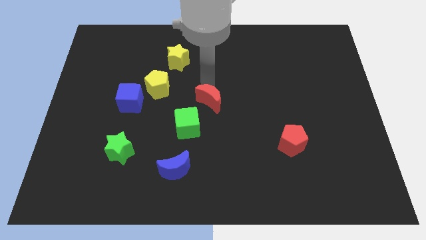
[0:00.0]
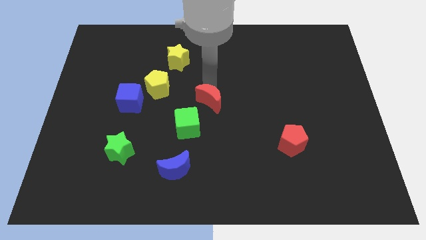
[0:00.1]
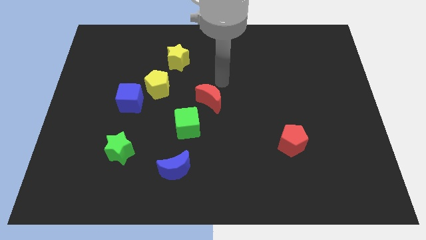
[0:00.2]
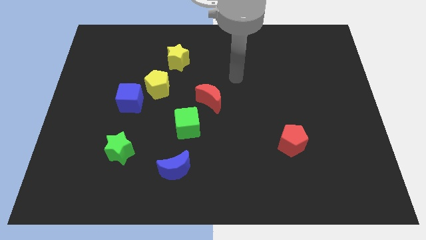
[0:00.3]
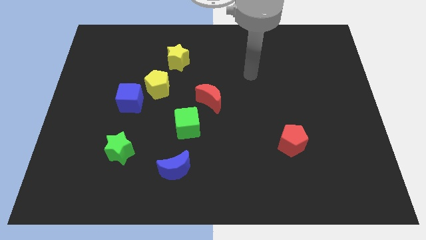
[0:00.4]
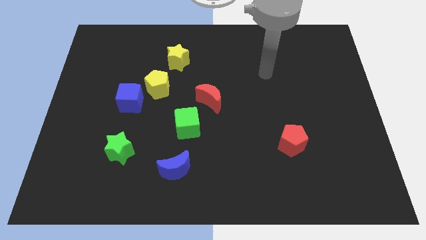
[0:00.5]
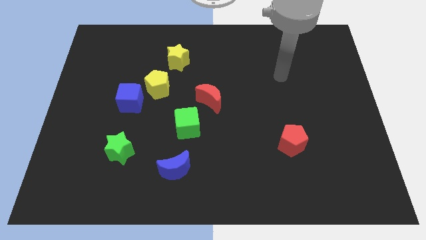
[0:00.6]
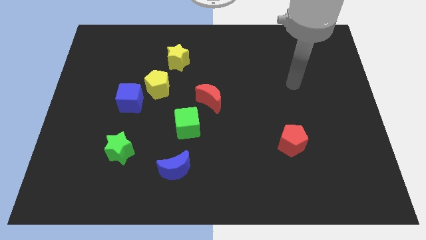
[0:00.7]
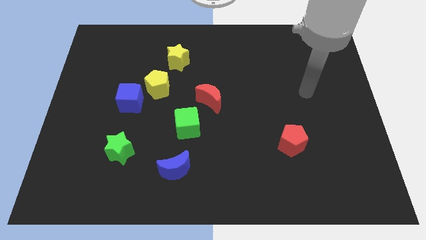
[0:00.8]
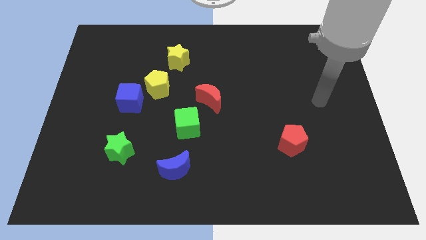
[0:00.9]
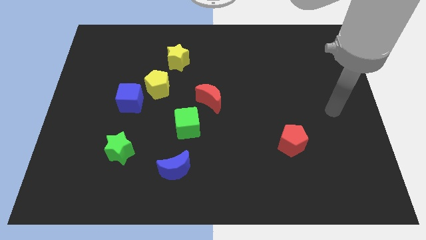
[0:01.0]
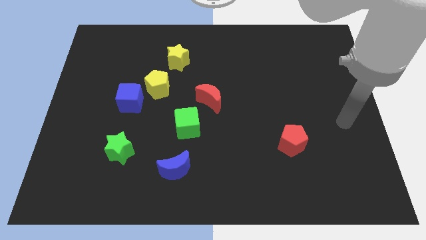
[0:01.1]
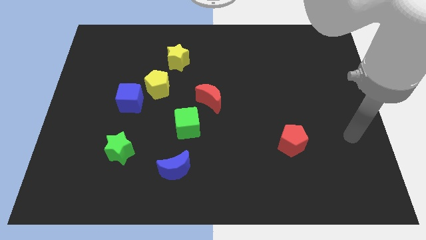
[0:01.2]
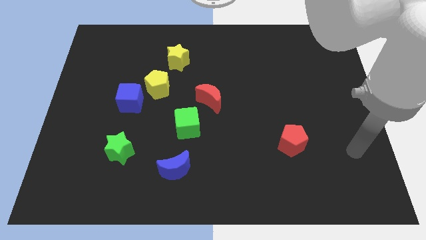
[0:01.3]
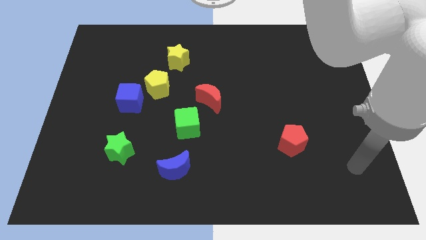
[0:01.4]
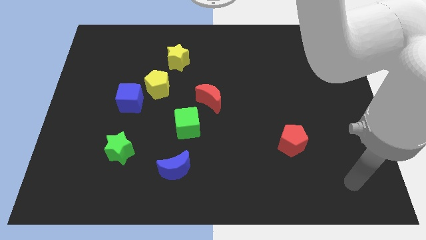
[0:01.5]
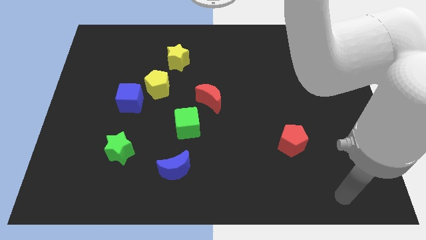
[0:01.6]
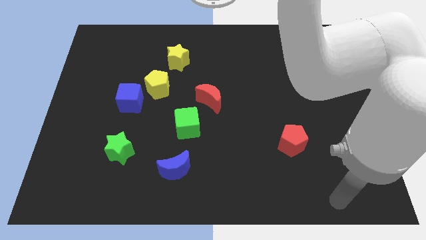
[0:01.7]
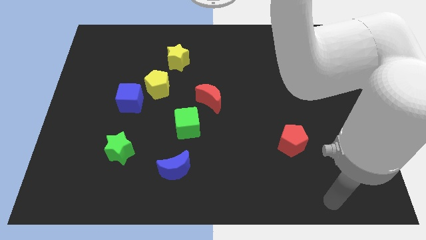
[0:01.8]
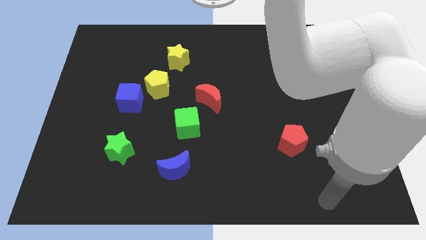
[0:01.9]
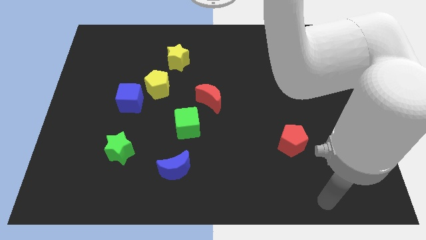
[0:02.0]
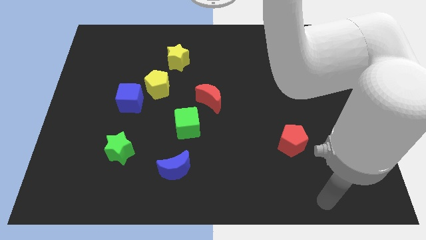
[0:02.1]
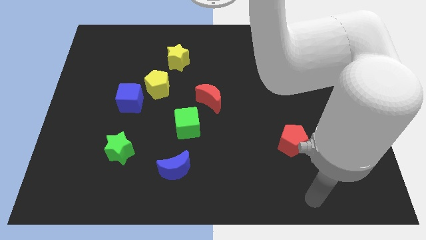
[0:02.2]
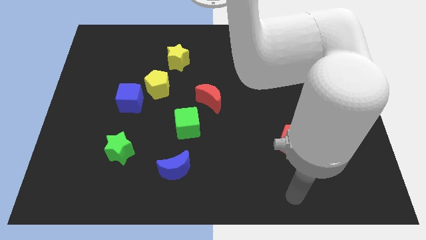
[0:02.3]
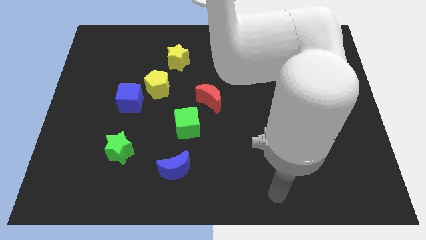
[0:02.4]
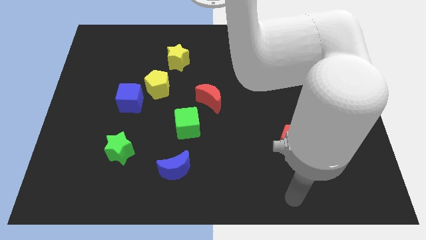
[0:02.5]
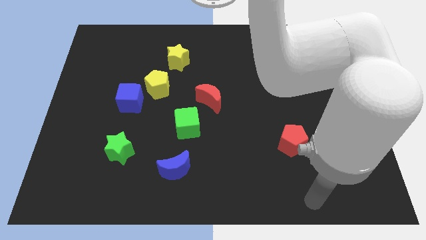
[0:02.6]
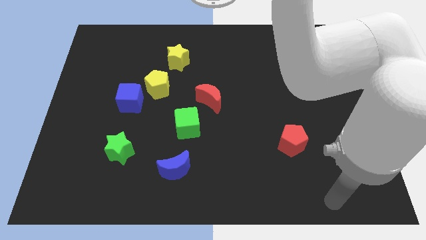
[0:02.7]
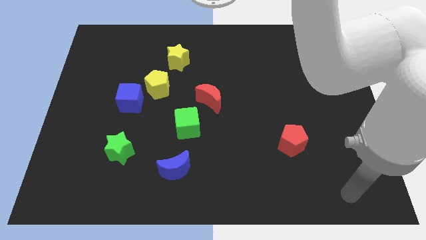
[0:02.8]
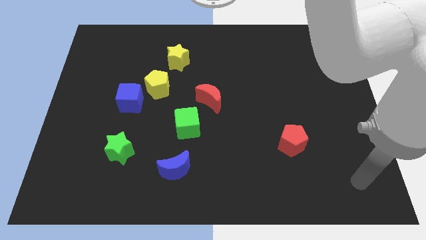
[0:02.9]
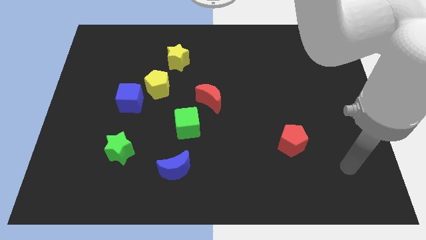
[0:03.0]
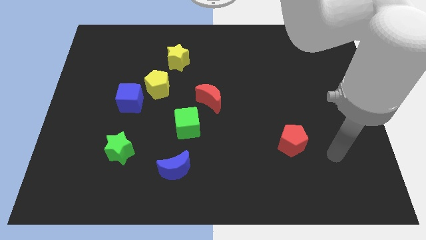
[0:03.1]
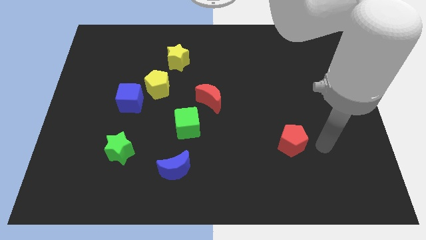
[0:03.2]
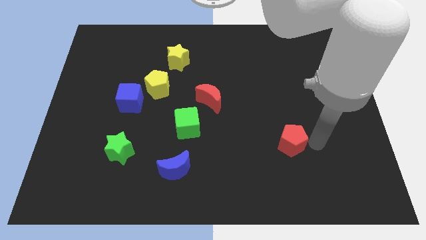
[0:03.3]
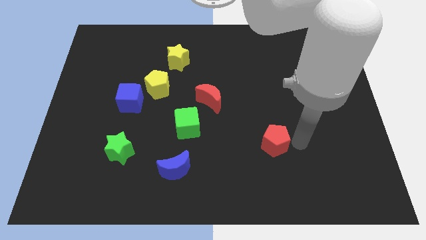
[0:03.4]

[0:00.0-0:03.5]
move your arm towards the red pentagon

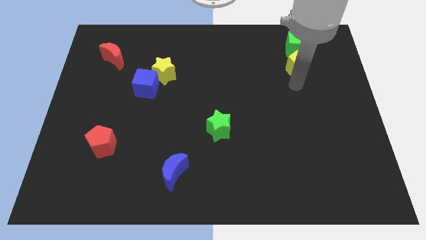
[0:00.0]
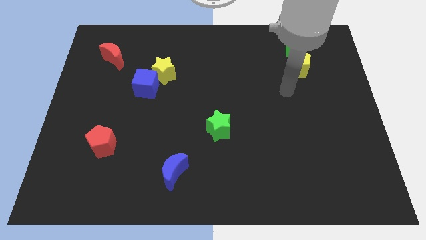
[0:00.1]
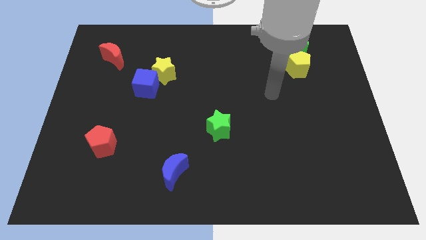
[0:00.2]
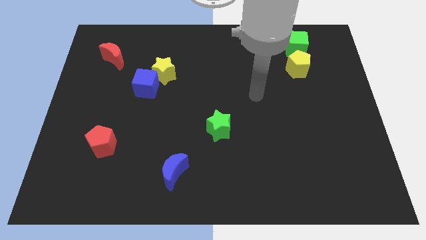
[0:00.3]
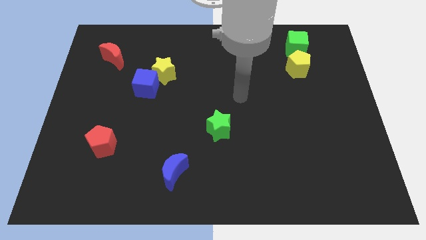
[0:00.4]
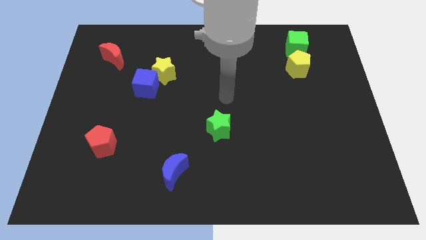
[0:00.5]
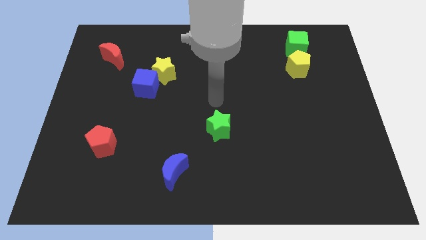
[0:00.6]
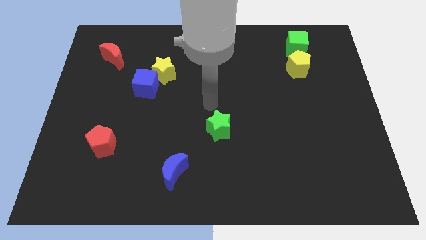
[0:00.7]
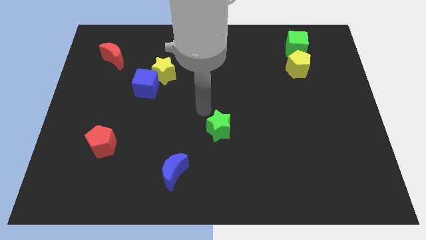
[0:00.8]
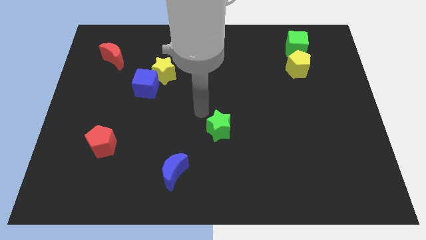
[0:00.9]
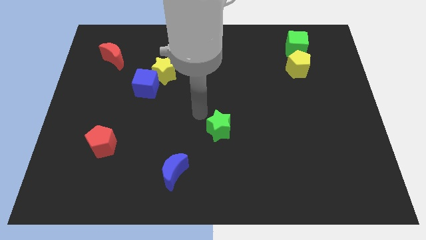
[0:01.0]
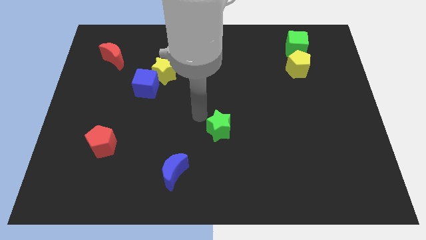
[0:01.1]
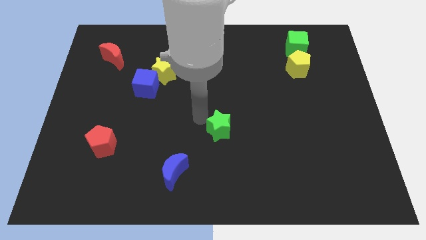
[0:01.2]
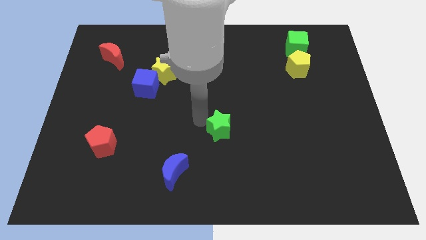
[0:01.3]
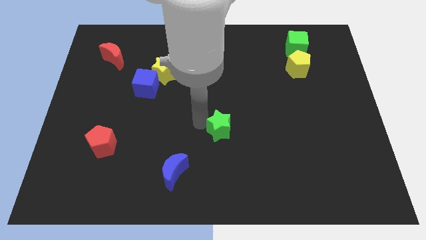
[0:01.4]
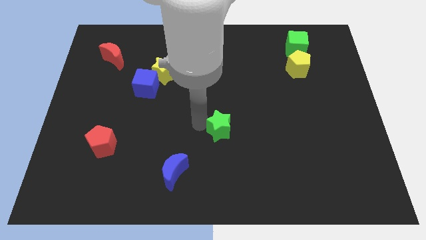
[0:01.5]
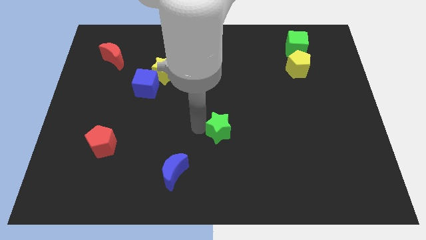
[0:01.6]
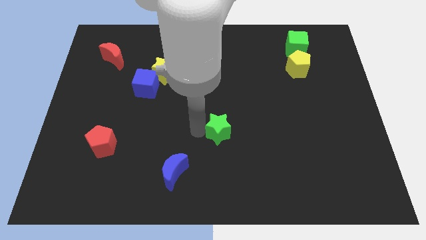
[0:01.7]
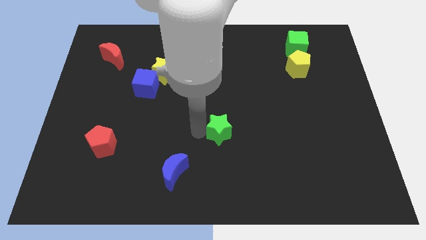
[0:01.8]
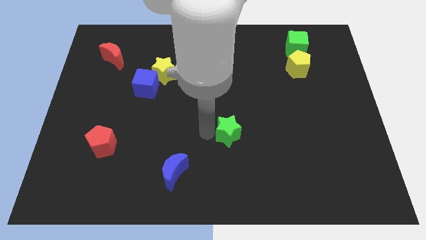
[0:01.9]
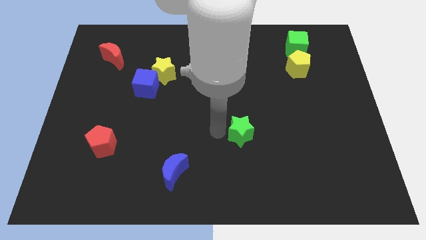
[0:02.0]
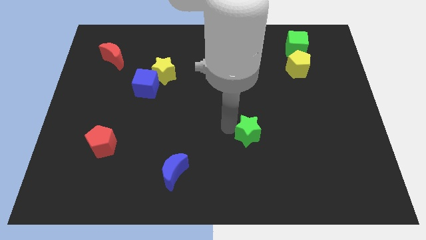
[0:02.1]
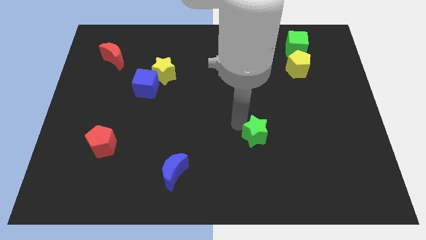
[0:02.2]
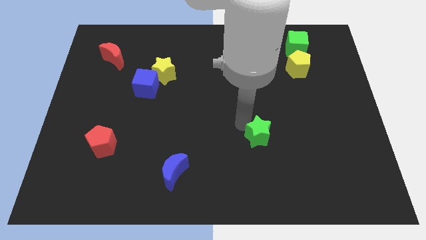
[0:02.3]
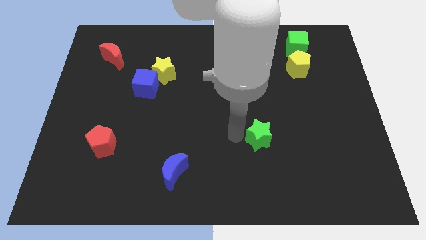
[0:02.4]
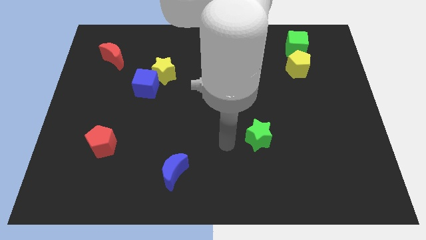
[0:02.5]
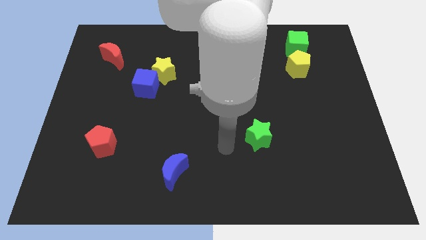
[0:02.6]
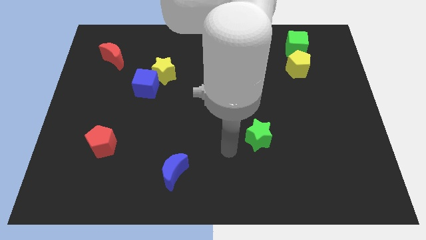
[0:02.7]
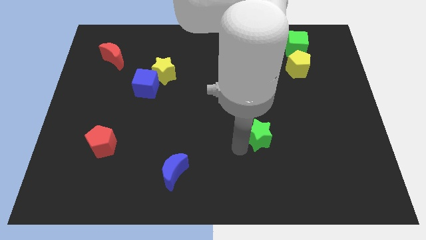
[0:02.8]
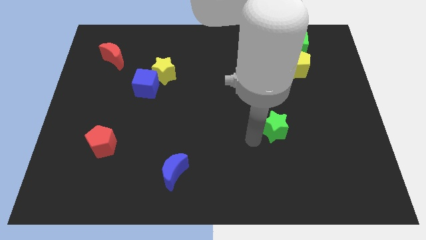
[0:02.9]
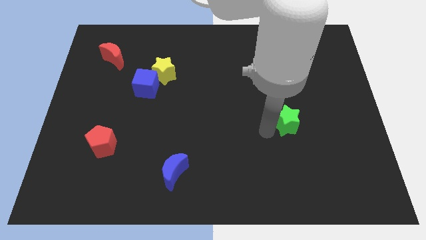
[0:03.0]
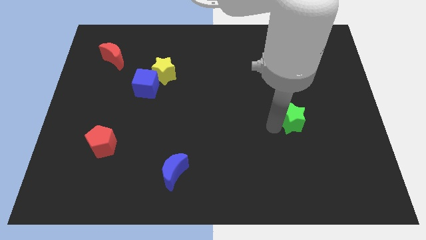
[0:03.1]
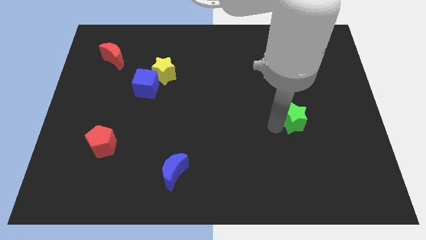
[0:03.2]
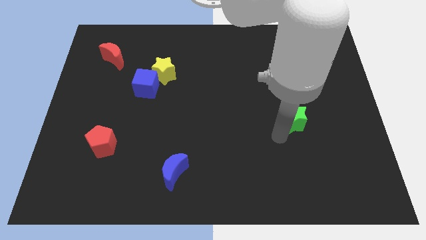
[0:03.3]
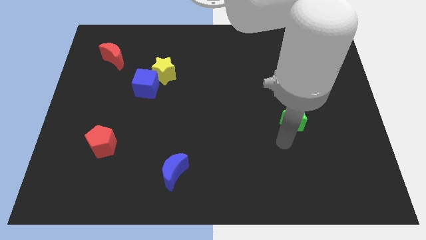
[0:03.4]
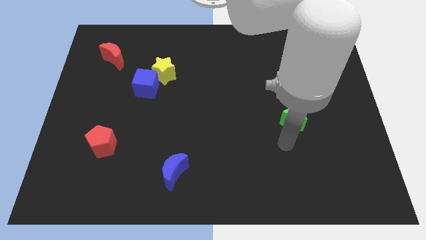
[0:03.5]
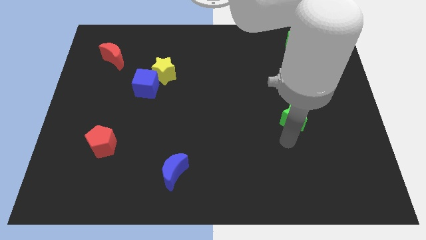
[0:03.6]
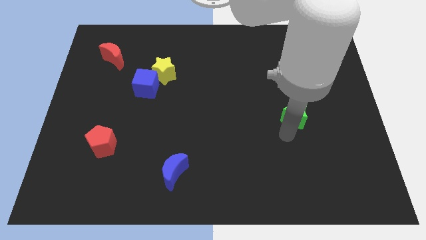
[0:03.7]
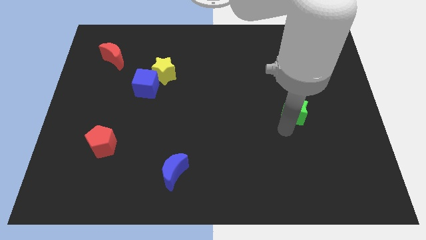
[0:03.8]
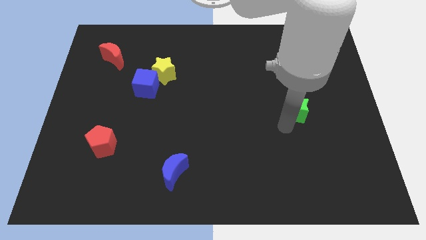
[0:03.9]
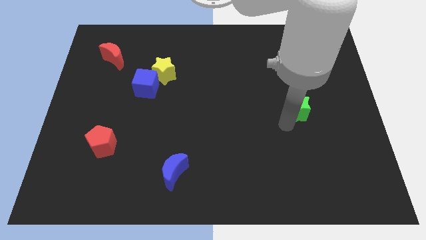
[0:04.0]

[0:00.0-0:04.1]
move the green star towards right center of the board

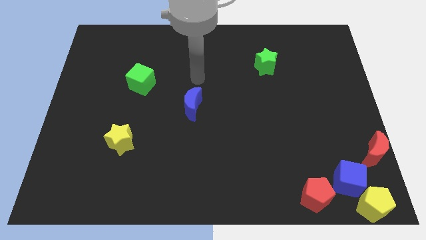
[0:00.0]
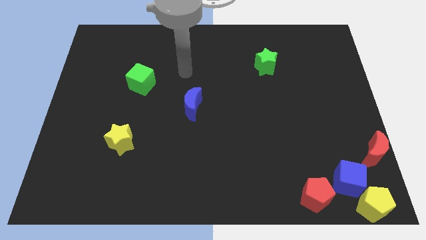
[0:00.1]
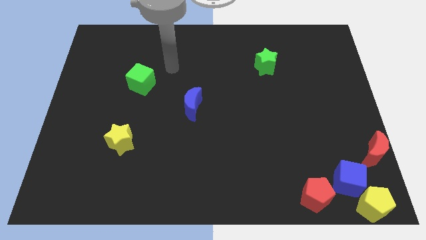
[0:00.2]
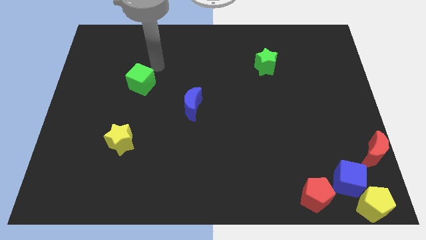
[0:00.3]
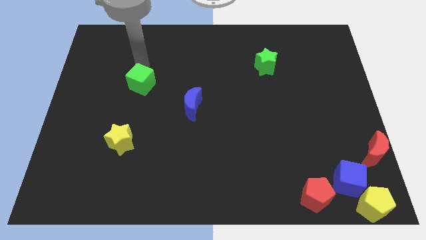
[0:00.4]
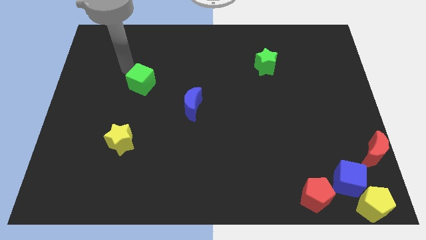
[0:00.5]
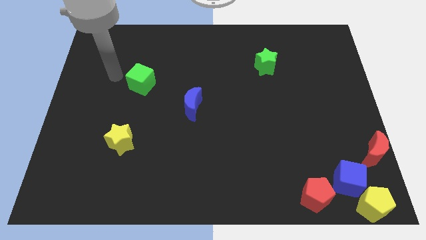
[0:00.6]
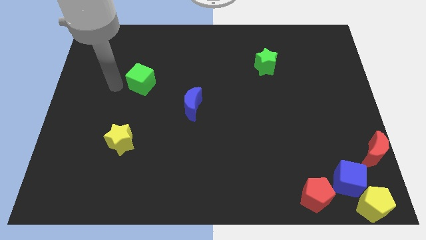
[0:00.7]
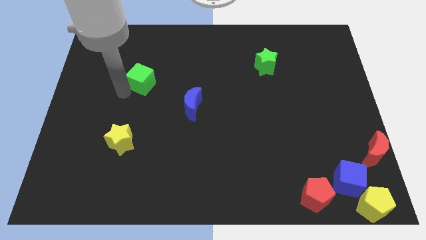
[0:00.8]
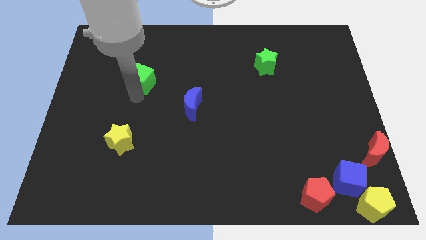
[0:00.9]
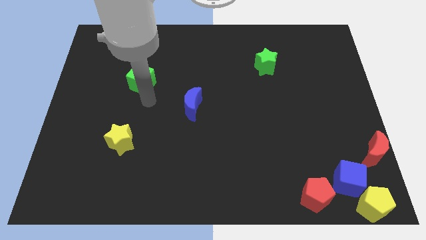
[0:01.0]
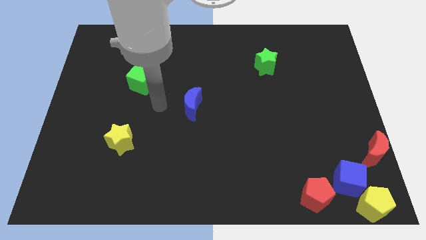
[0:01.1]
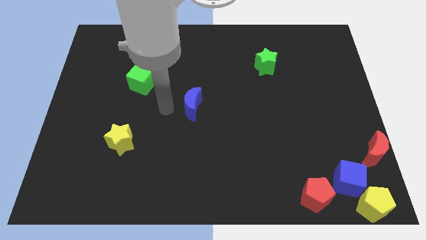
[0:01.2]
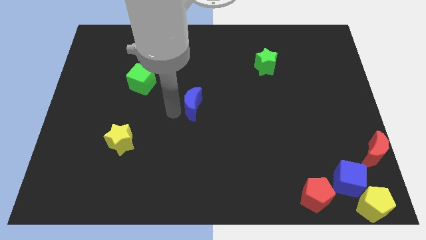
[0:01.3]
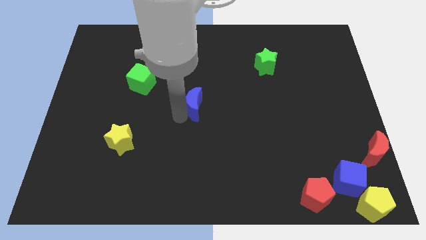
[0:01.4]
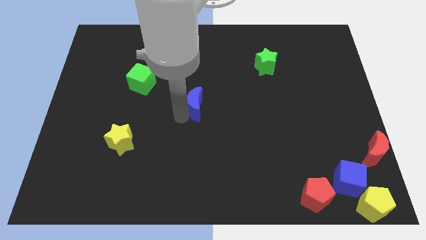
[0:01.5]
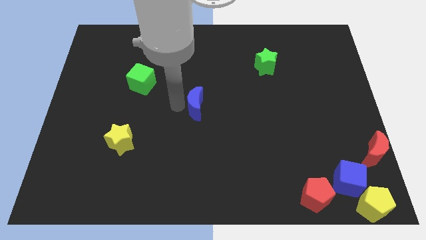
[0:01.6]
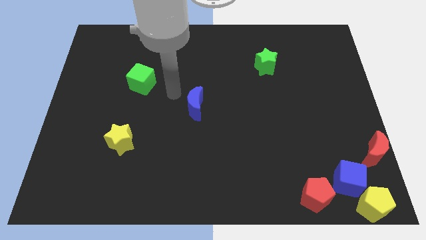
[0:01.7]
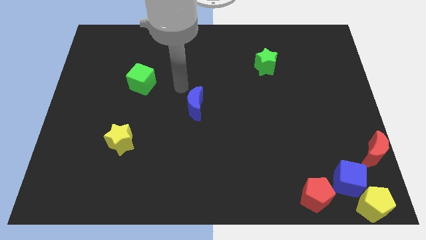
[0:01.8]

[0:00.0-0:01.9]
slightly move the blue crescent
